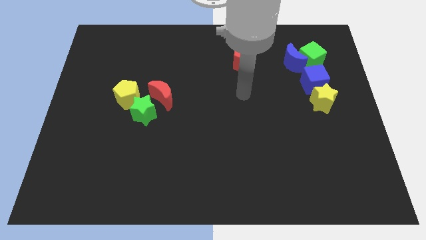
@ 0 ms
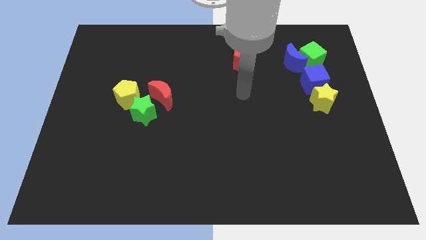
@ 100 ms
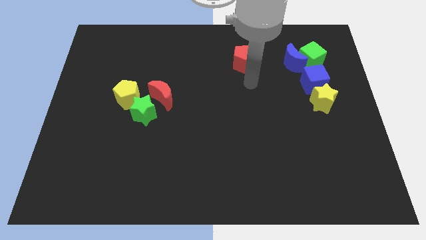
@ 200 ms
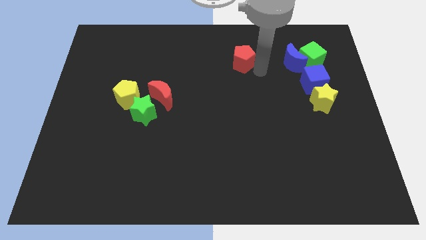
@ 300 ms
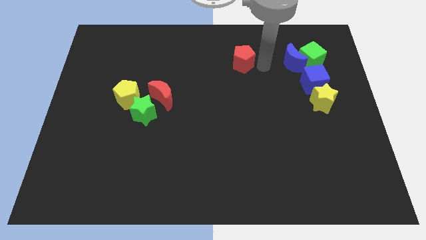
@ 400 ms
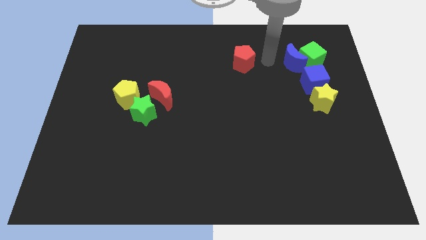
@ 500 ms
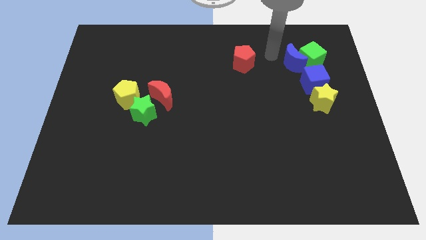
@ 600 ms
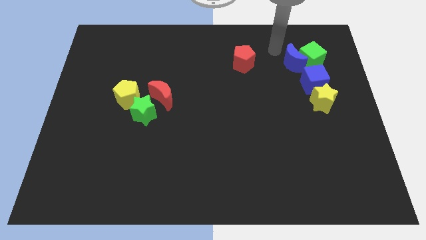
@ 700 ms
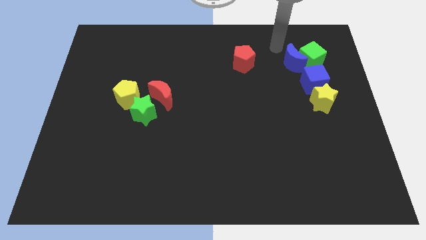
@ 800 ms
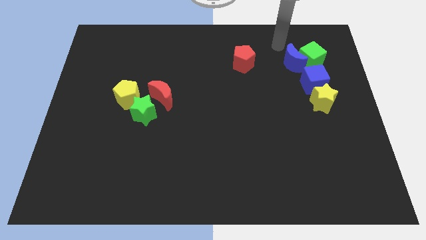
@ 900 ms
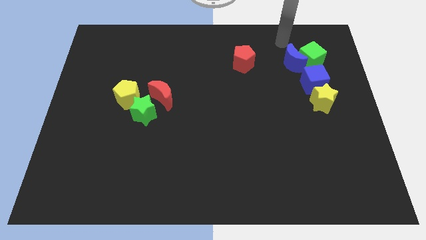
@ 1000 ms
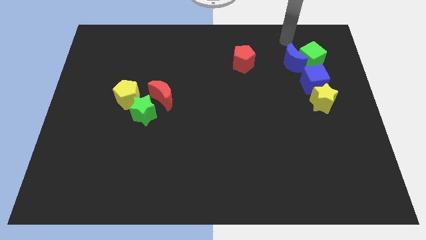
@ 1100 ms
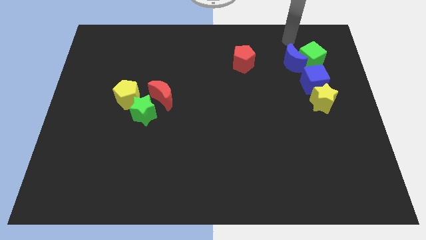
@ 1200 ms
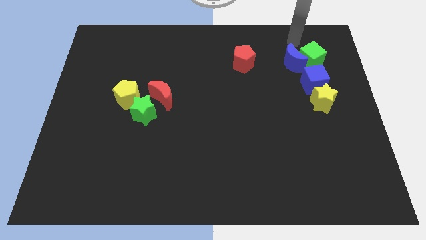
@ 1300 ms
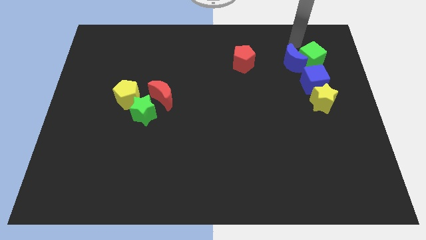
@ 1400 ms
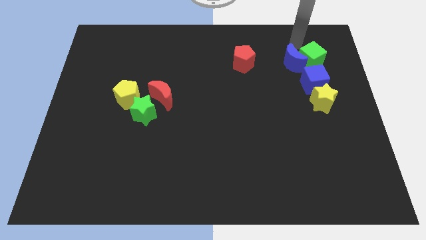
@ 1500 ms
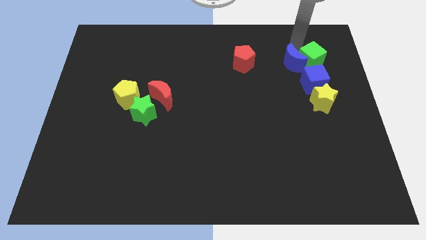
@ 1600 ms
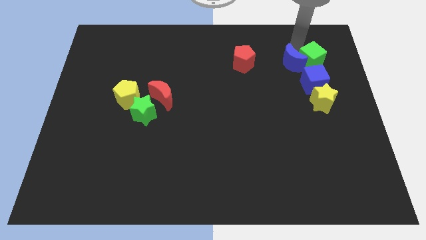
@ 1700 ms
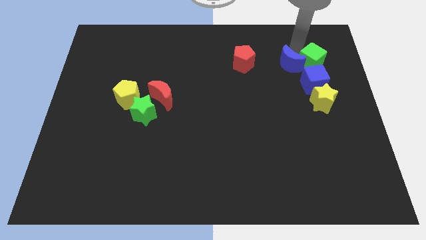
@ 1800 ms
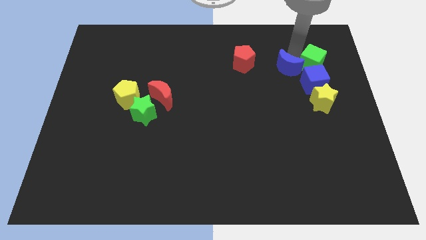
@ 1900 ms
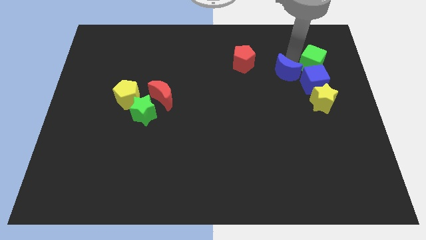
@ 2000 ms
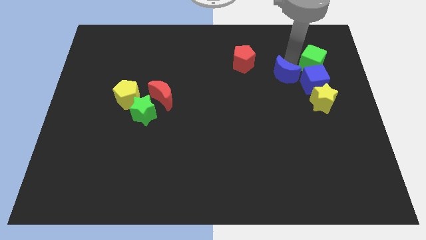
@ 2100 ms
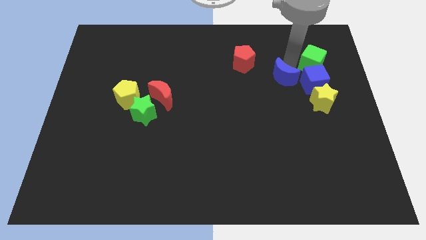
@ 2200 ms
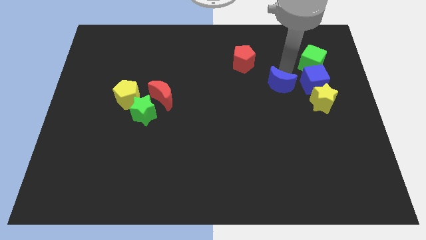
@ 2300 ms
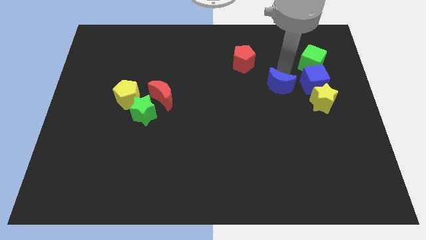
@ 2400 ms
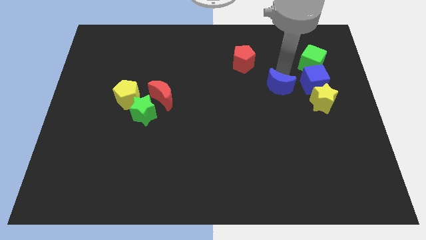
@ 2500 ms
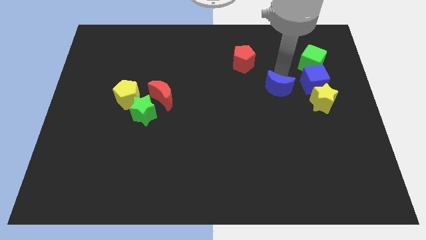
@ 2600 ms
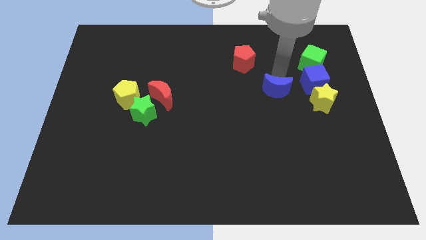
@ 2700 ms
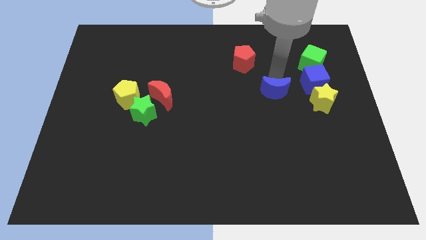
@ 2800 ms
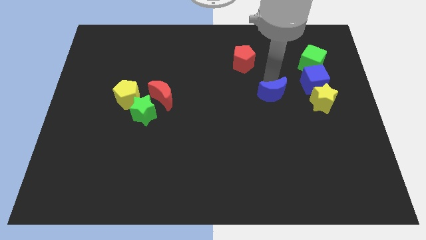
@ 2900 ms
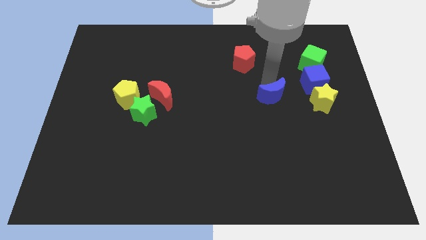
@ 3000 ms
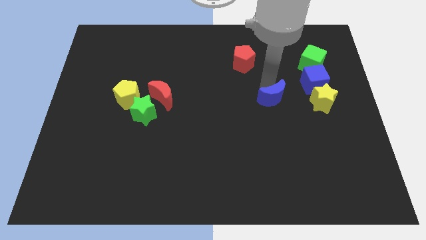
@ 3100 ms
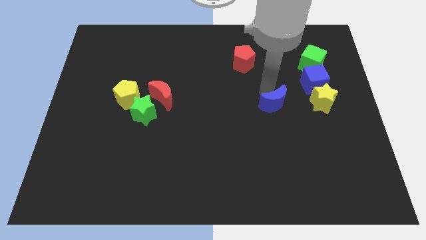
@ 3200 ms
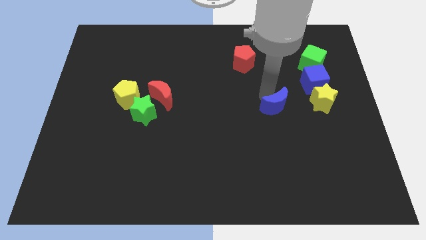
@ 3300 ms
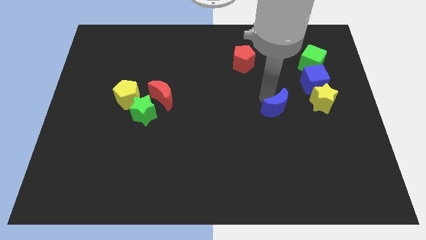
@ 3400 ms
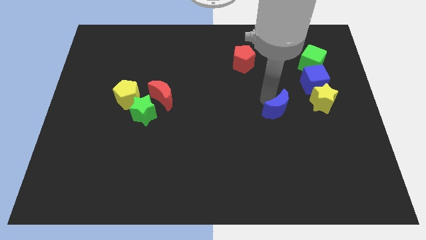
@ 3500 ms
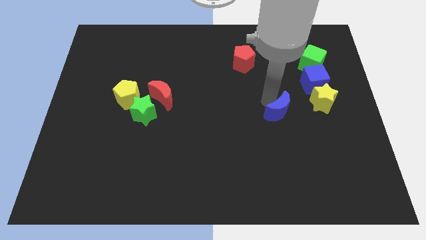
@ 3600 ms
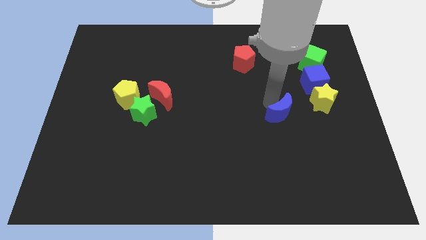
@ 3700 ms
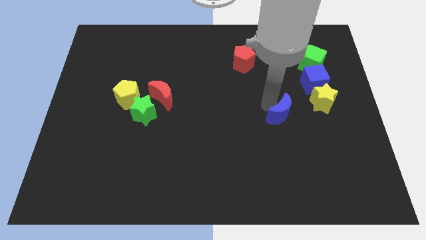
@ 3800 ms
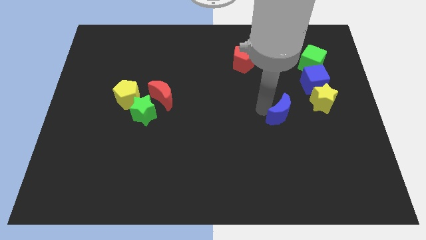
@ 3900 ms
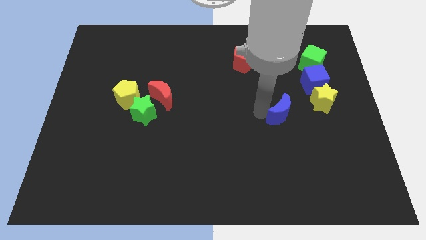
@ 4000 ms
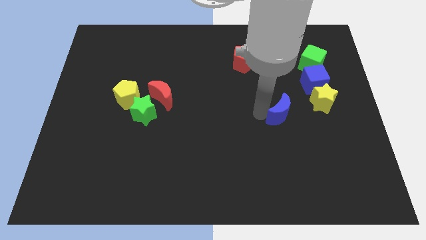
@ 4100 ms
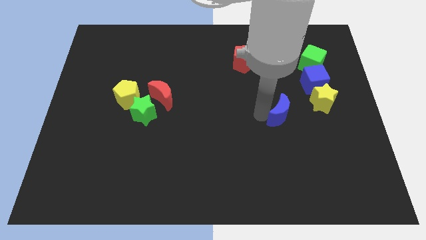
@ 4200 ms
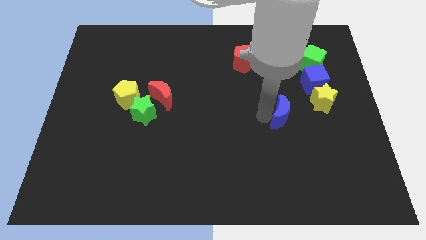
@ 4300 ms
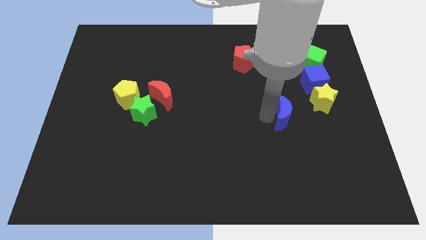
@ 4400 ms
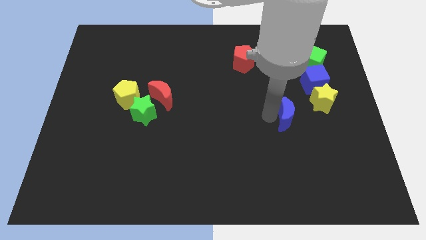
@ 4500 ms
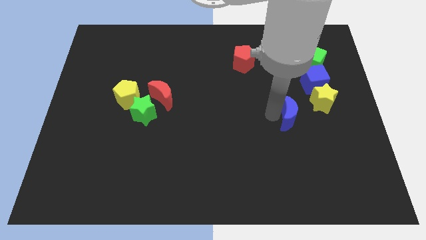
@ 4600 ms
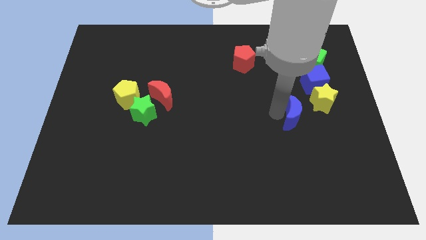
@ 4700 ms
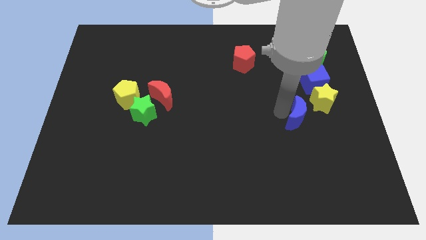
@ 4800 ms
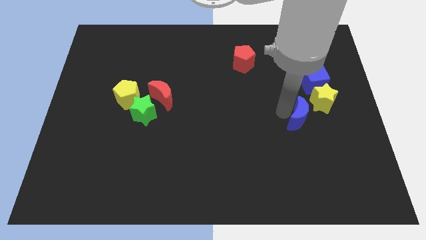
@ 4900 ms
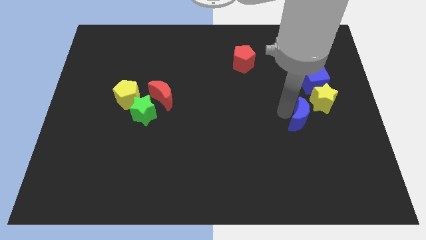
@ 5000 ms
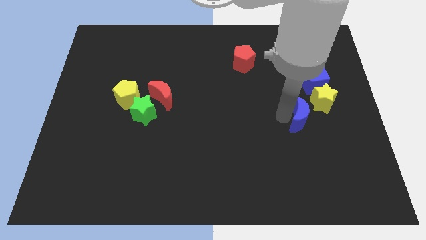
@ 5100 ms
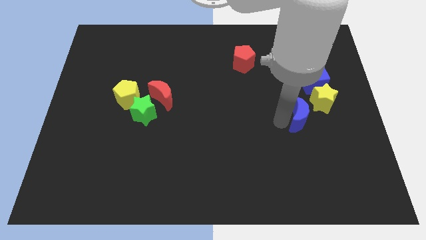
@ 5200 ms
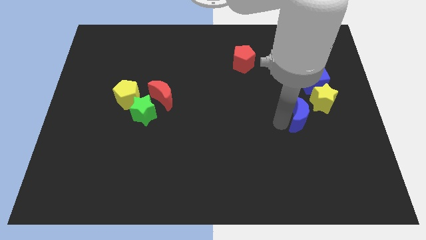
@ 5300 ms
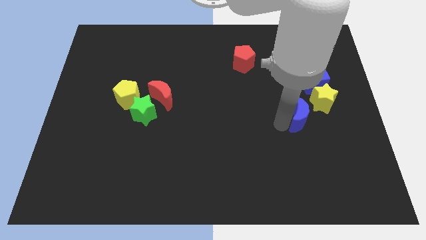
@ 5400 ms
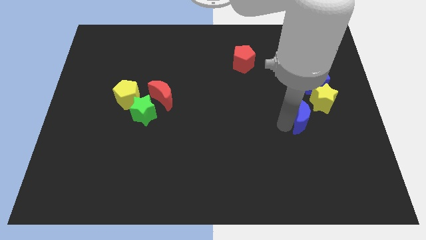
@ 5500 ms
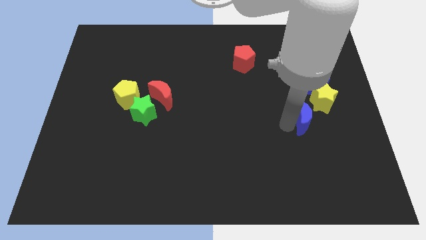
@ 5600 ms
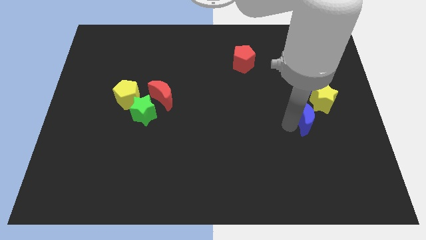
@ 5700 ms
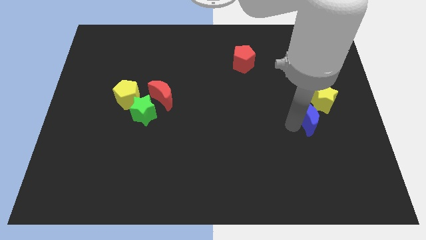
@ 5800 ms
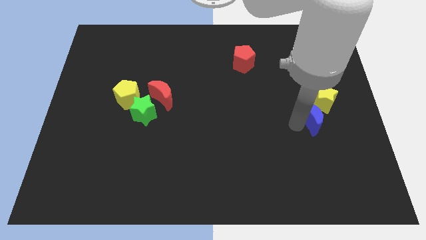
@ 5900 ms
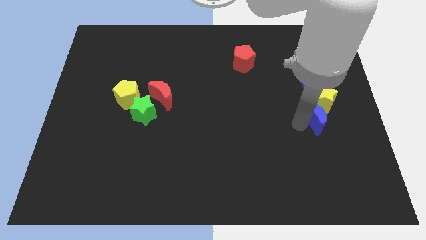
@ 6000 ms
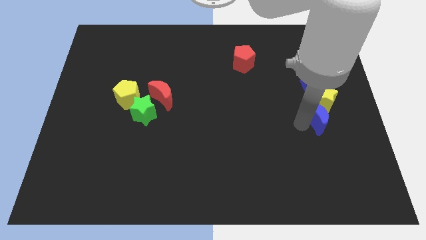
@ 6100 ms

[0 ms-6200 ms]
push the blue moon to the yellow star

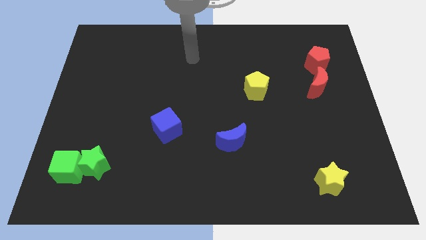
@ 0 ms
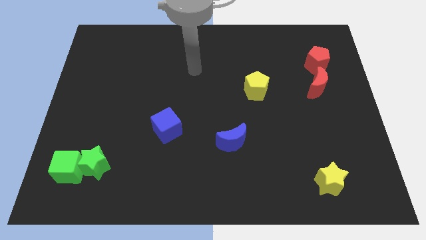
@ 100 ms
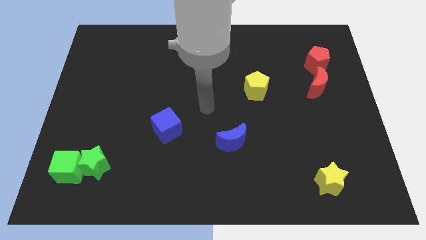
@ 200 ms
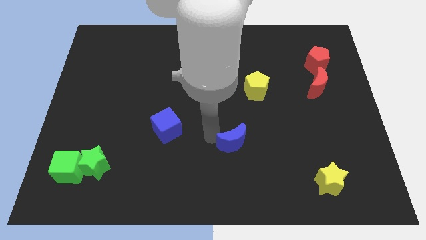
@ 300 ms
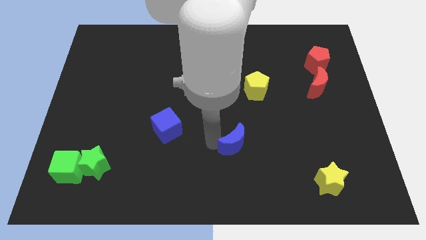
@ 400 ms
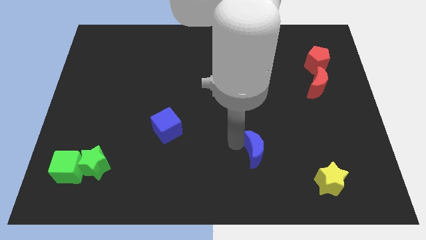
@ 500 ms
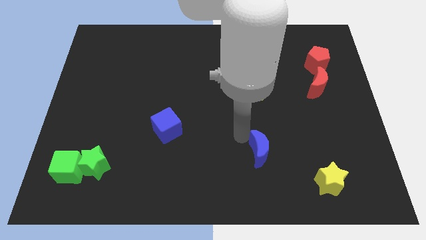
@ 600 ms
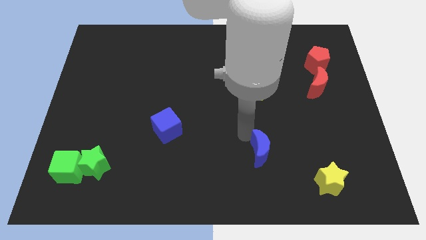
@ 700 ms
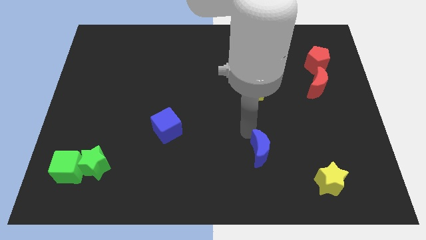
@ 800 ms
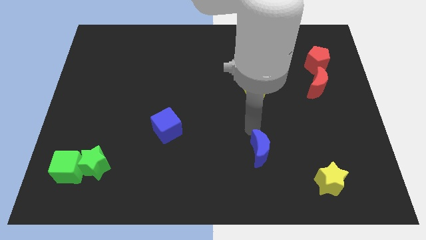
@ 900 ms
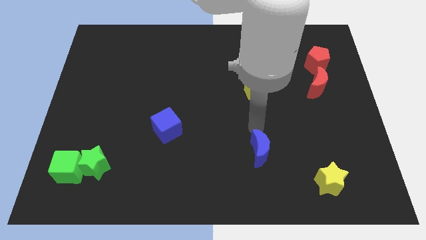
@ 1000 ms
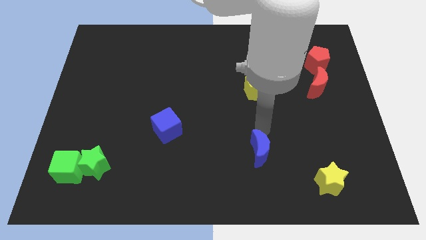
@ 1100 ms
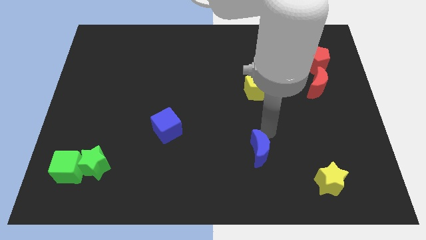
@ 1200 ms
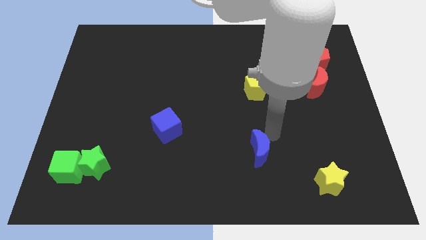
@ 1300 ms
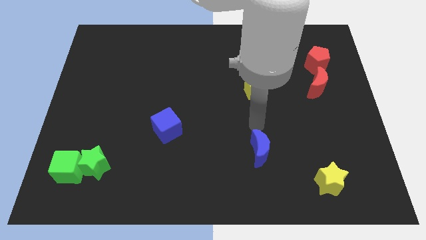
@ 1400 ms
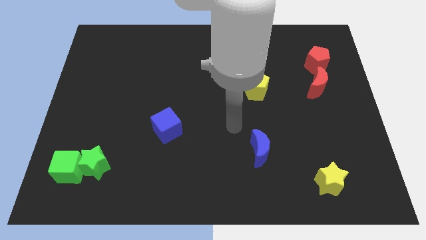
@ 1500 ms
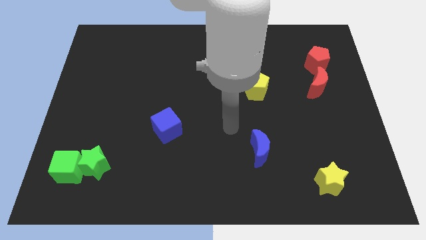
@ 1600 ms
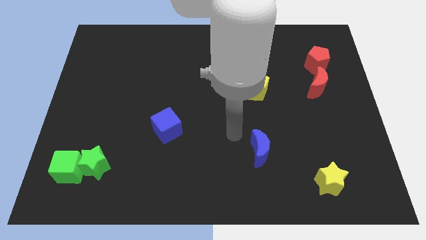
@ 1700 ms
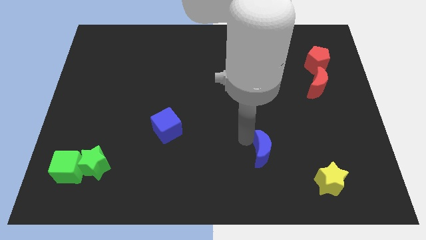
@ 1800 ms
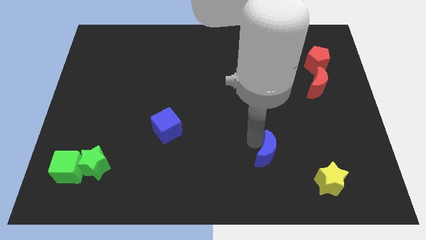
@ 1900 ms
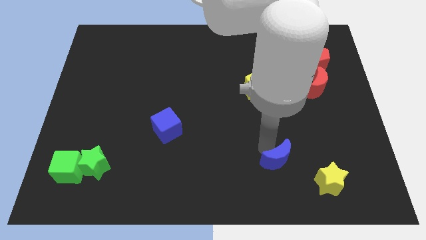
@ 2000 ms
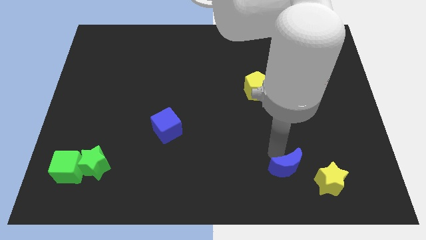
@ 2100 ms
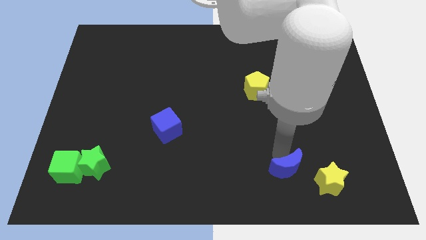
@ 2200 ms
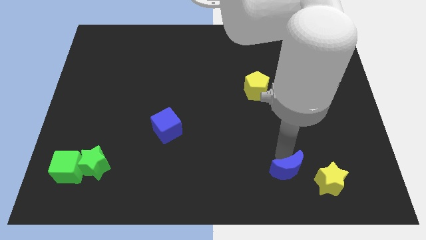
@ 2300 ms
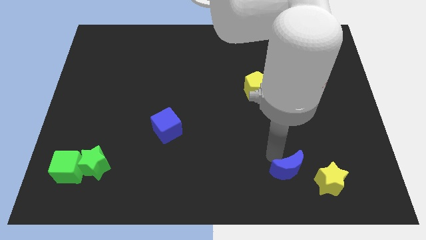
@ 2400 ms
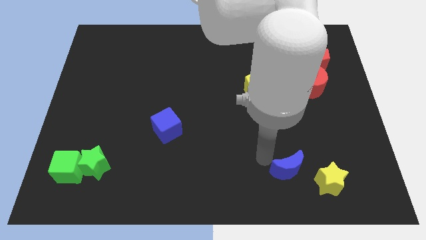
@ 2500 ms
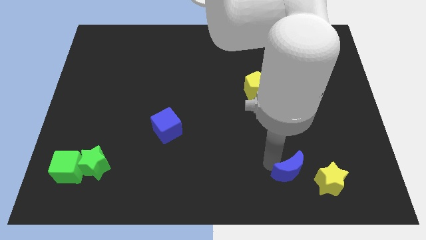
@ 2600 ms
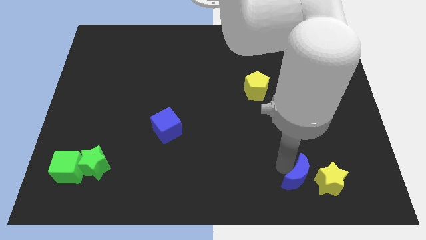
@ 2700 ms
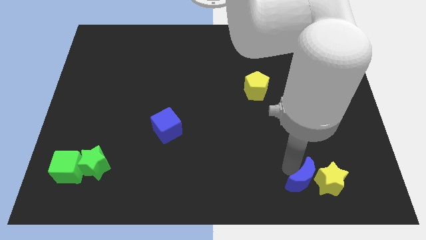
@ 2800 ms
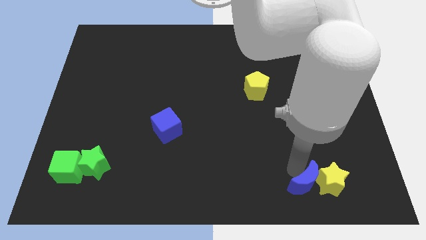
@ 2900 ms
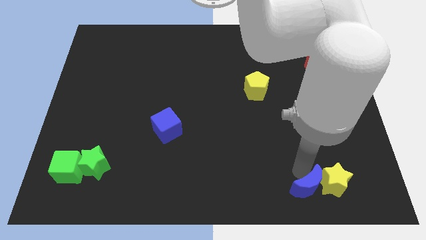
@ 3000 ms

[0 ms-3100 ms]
slide the blue moon close to the yellow star
